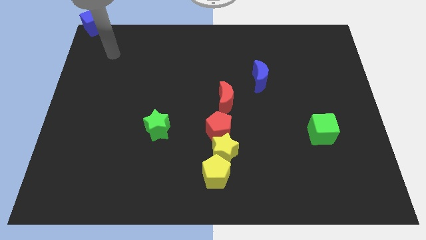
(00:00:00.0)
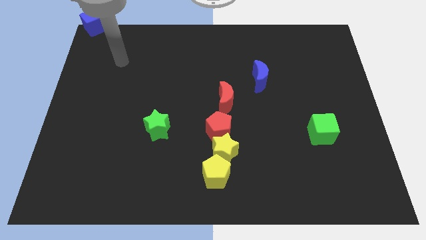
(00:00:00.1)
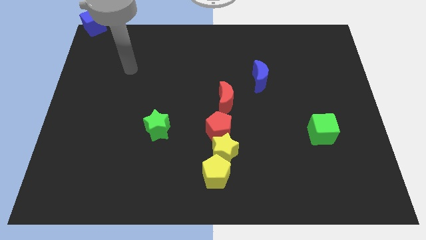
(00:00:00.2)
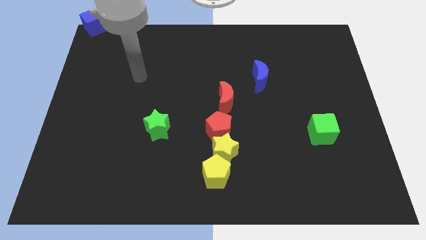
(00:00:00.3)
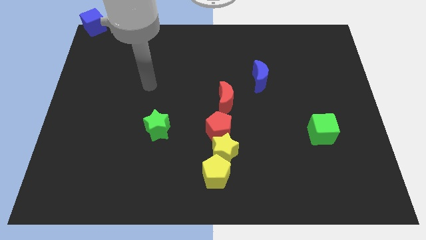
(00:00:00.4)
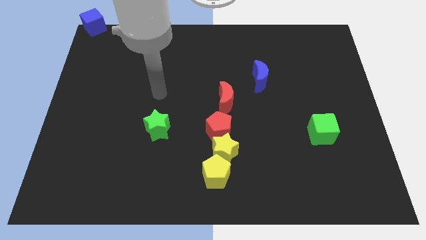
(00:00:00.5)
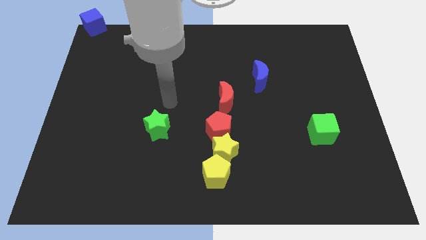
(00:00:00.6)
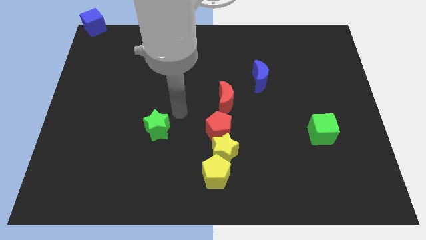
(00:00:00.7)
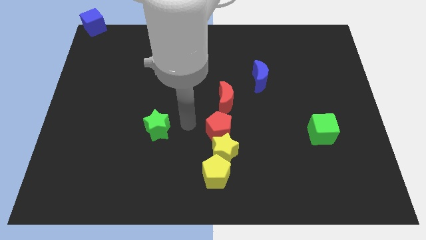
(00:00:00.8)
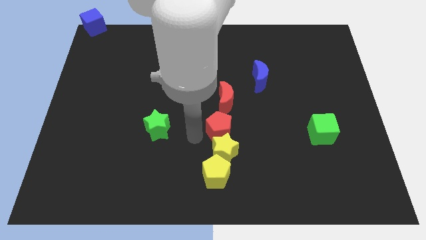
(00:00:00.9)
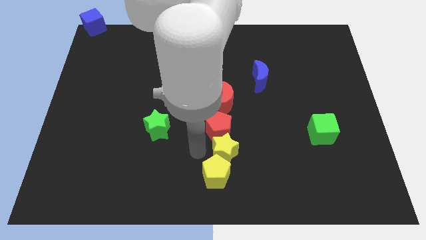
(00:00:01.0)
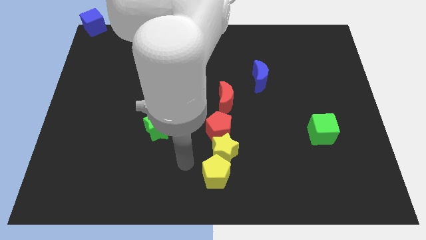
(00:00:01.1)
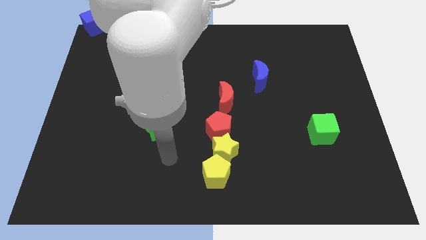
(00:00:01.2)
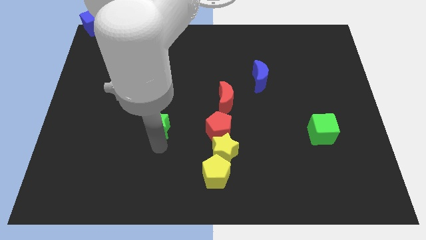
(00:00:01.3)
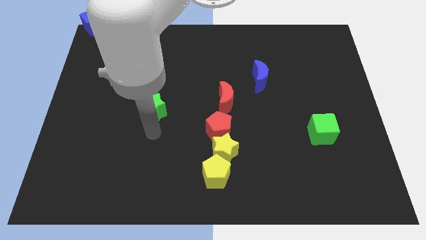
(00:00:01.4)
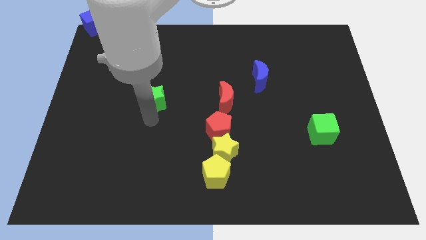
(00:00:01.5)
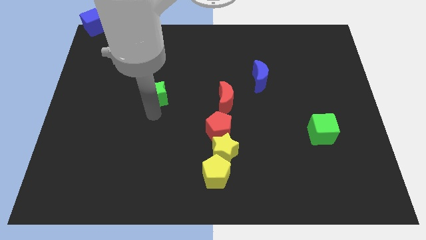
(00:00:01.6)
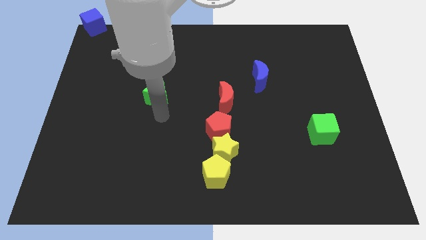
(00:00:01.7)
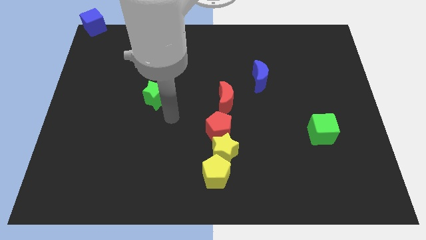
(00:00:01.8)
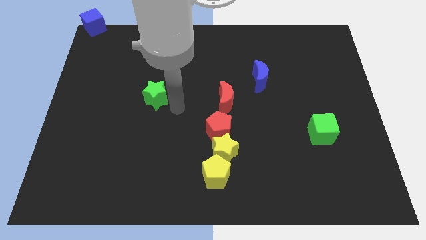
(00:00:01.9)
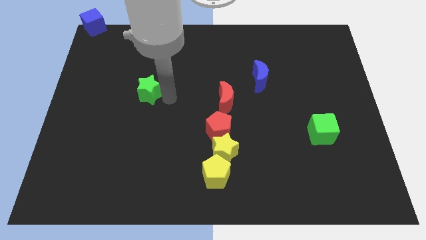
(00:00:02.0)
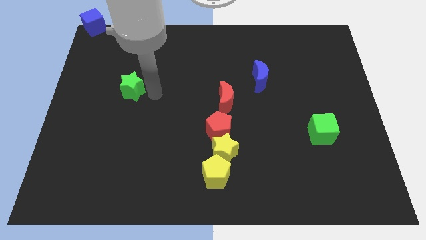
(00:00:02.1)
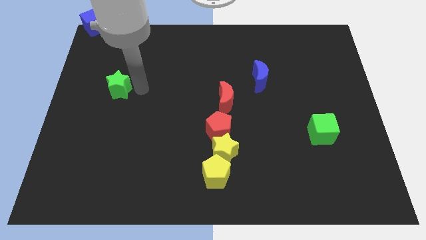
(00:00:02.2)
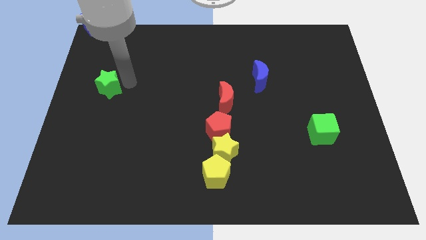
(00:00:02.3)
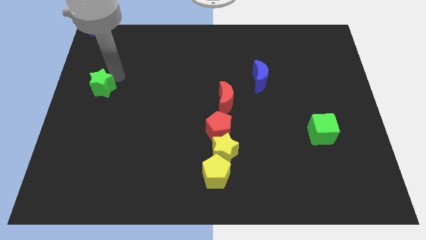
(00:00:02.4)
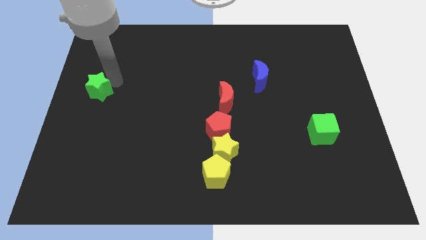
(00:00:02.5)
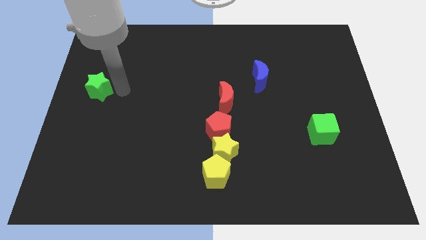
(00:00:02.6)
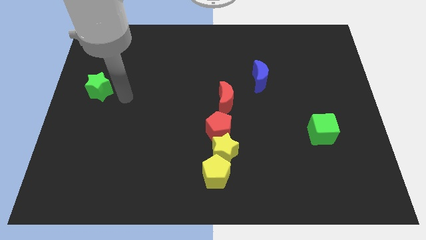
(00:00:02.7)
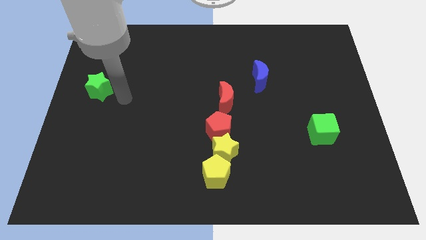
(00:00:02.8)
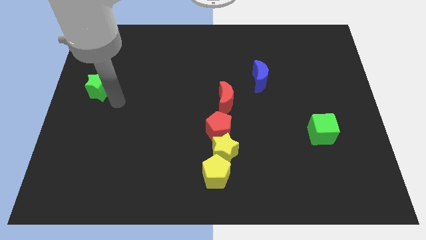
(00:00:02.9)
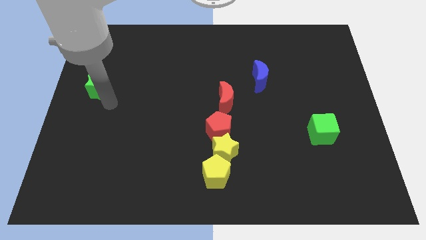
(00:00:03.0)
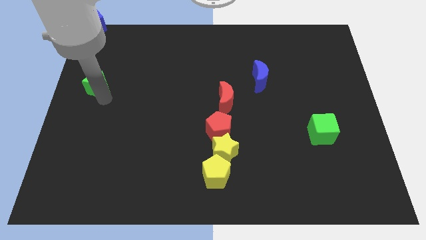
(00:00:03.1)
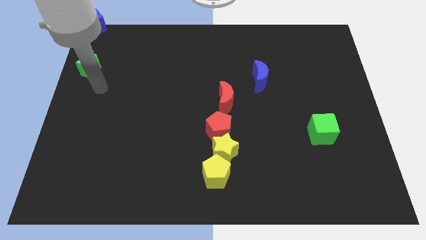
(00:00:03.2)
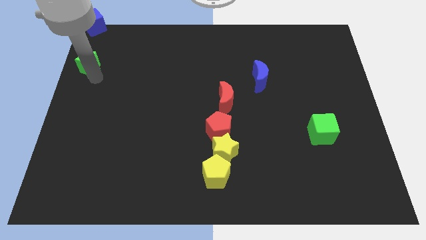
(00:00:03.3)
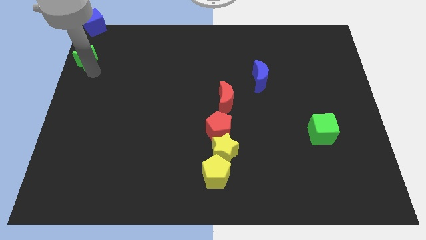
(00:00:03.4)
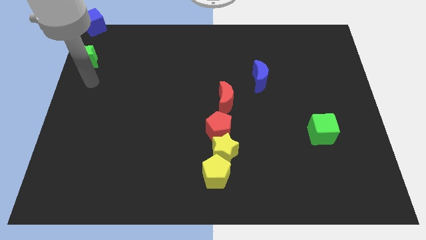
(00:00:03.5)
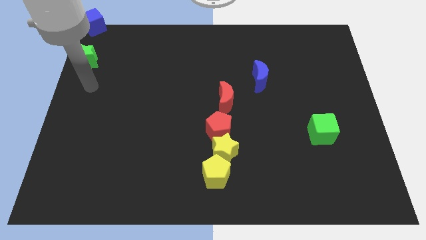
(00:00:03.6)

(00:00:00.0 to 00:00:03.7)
place the green star under the blue cube

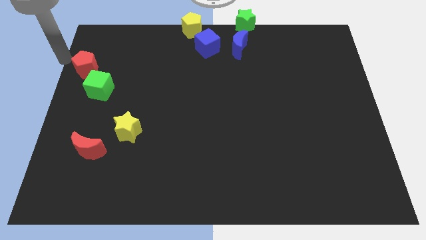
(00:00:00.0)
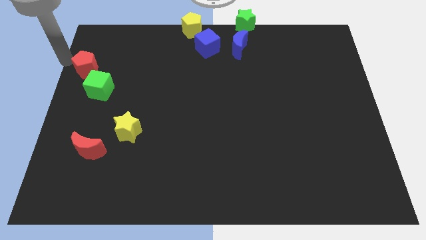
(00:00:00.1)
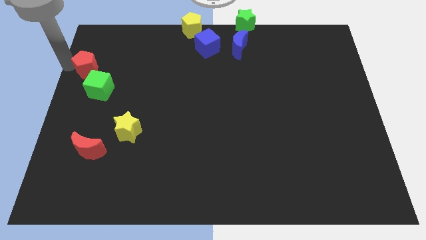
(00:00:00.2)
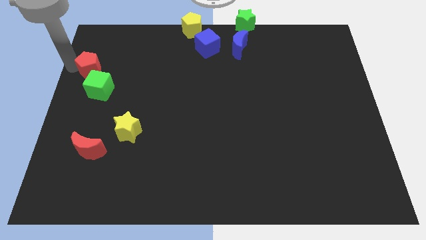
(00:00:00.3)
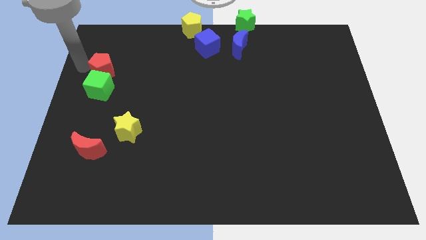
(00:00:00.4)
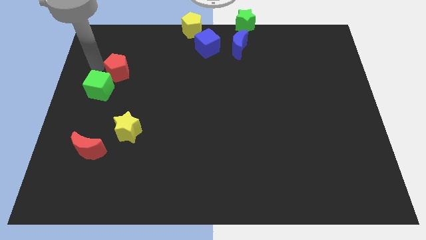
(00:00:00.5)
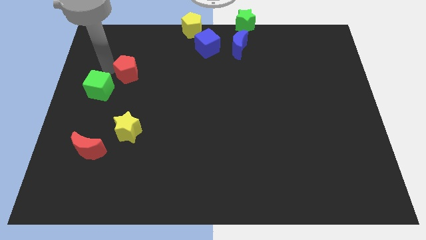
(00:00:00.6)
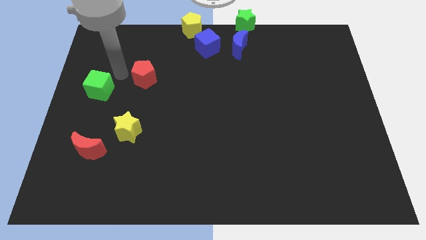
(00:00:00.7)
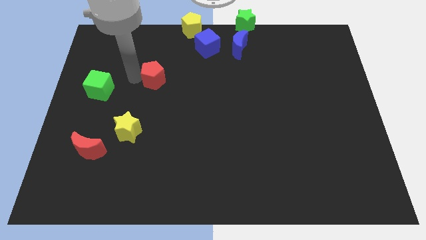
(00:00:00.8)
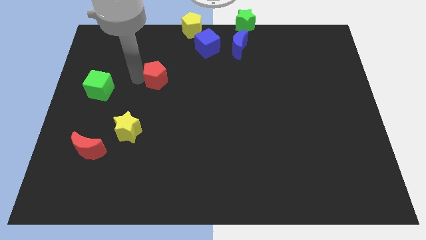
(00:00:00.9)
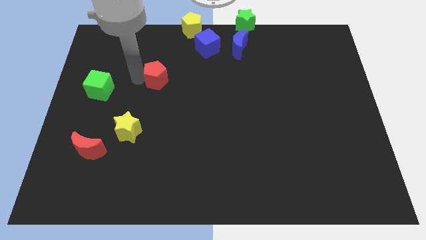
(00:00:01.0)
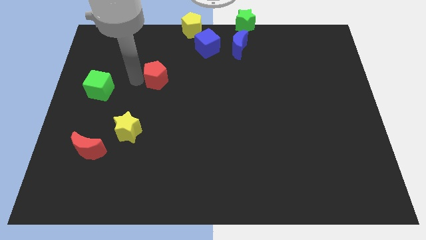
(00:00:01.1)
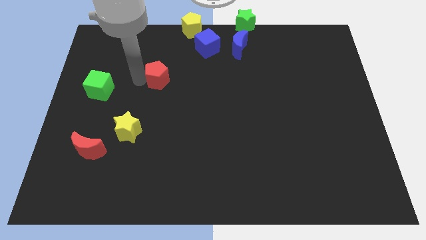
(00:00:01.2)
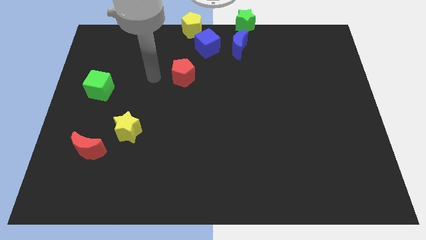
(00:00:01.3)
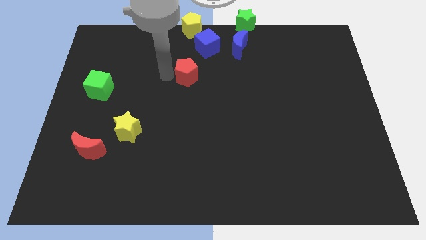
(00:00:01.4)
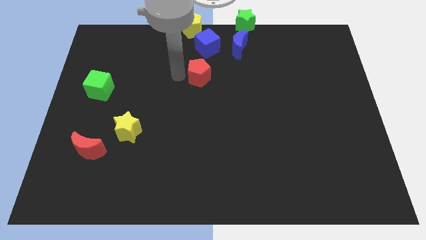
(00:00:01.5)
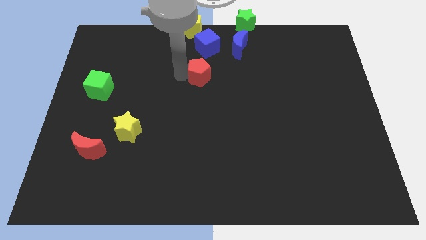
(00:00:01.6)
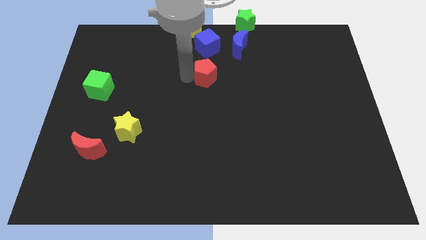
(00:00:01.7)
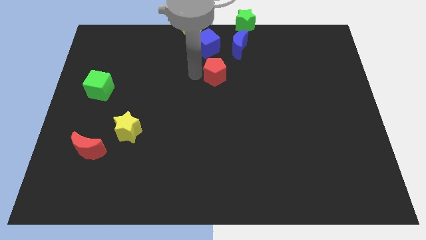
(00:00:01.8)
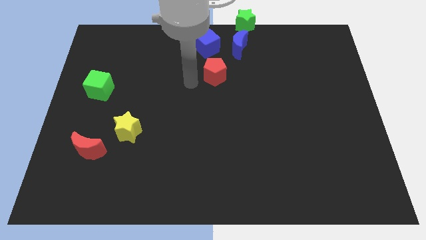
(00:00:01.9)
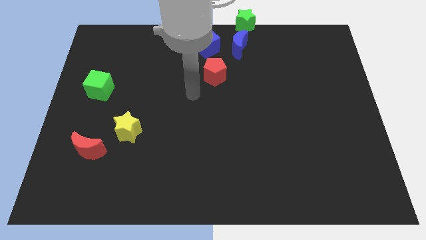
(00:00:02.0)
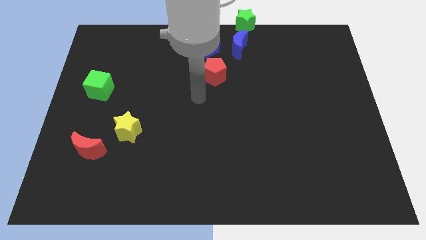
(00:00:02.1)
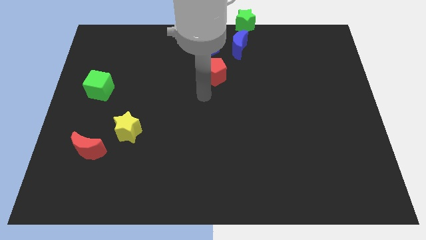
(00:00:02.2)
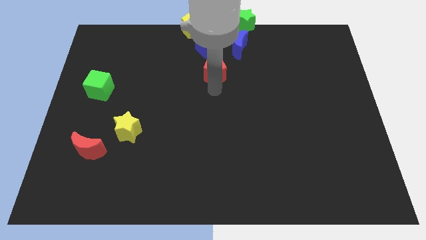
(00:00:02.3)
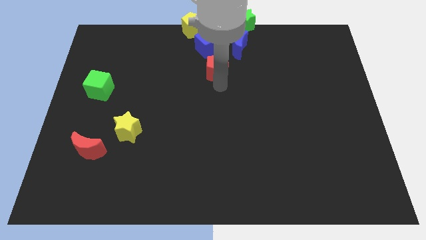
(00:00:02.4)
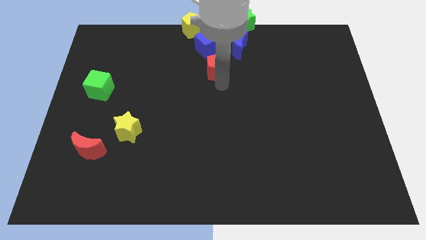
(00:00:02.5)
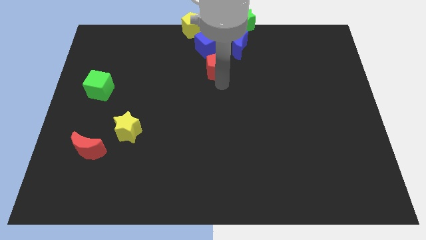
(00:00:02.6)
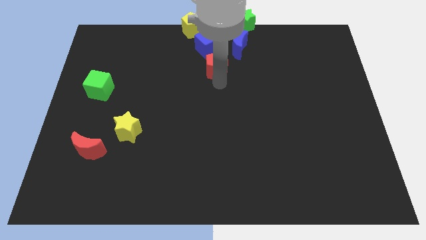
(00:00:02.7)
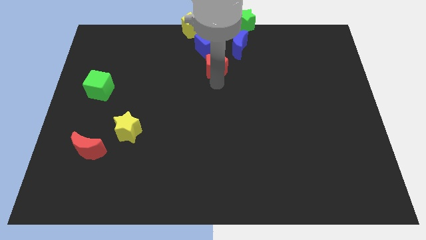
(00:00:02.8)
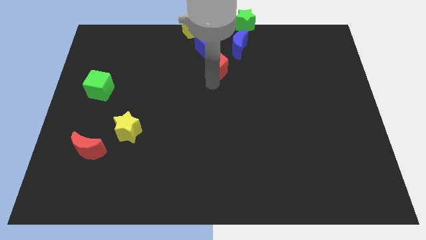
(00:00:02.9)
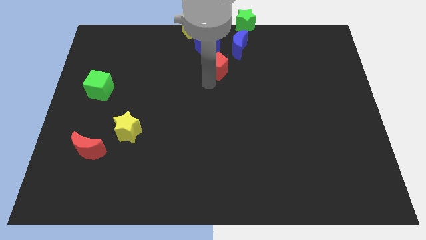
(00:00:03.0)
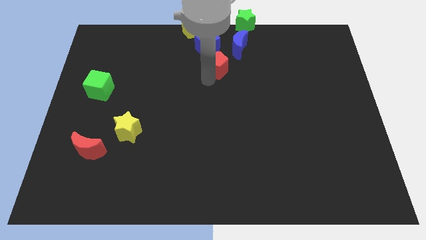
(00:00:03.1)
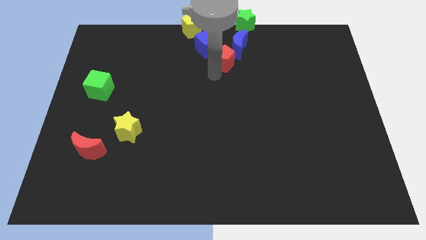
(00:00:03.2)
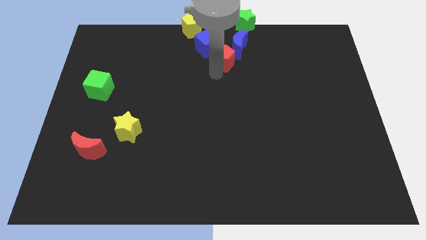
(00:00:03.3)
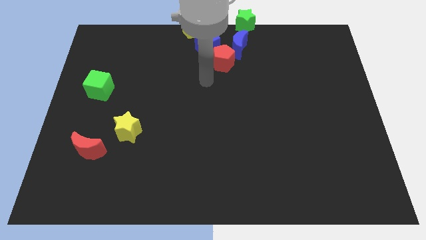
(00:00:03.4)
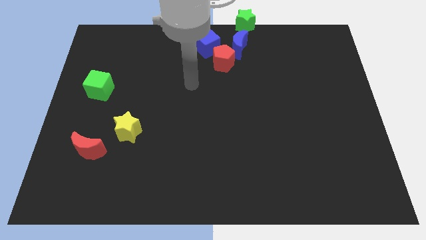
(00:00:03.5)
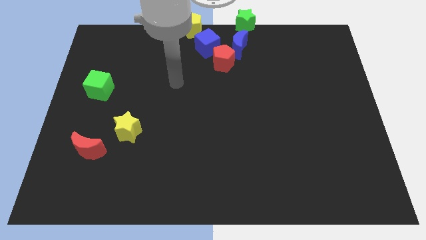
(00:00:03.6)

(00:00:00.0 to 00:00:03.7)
push the red pentagon to the bottom right of the blue cube

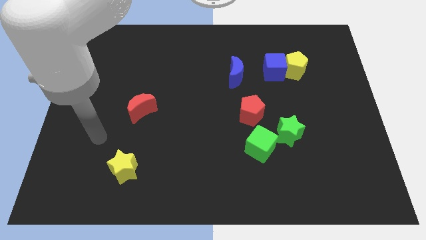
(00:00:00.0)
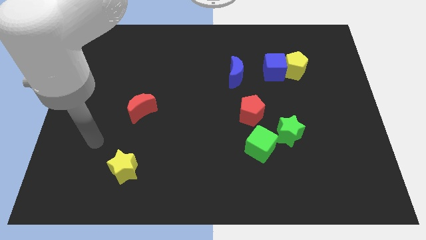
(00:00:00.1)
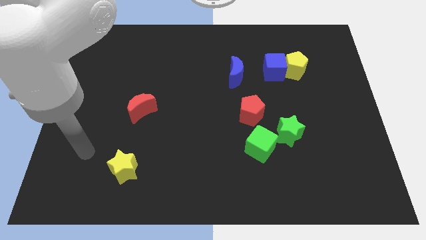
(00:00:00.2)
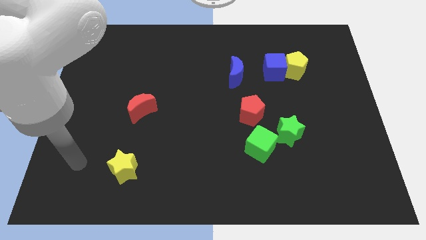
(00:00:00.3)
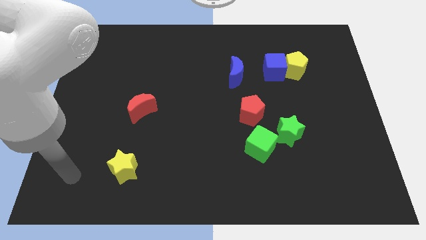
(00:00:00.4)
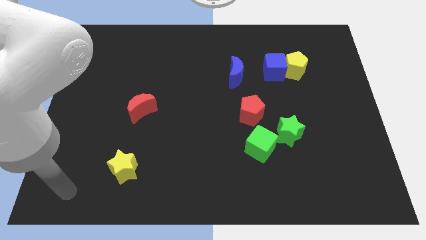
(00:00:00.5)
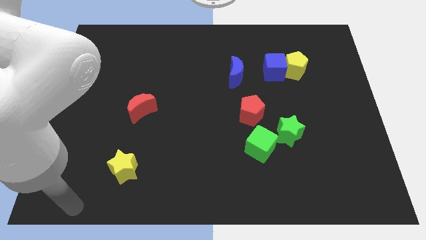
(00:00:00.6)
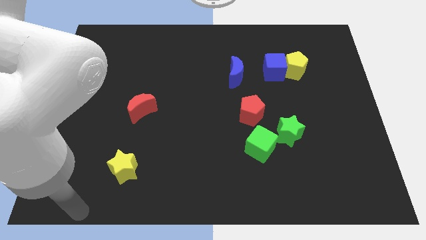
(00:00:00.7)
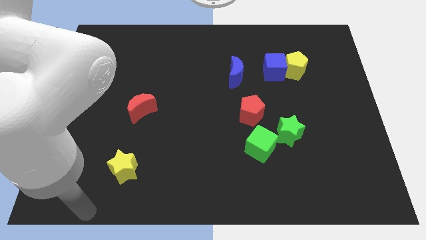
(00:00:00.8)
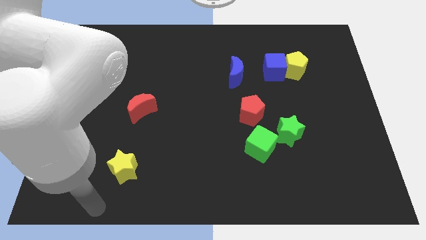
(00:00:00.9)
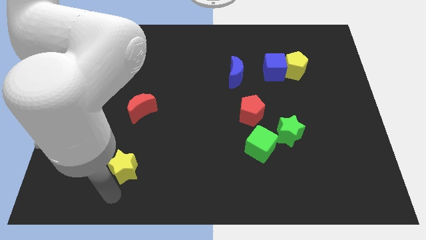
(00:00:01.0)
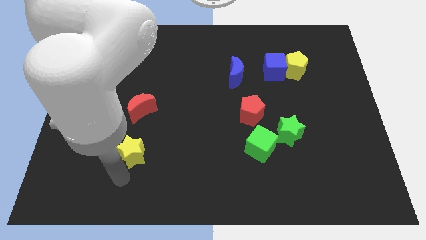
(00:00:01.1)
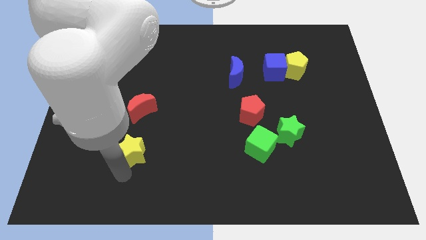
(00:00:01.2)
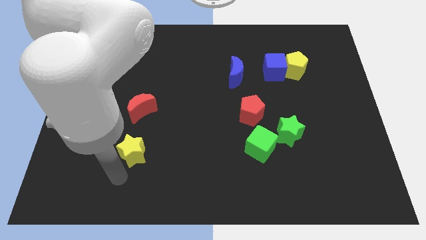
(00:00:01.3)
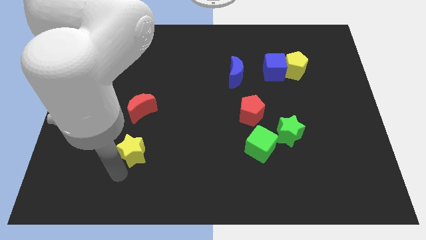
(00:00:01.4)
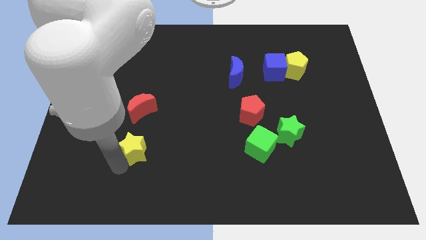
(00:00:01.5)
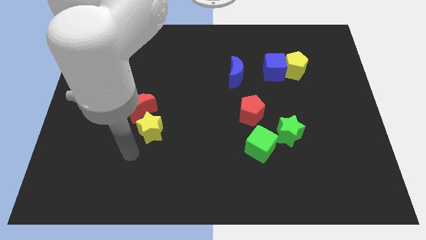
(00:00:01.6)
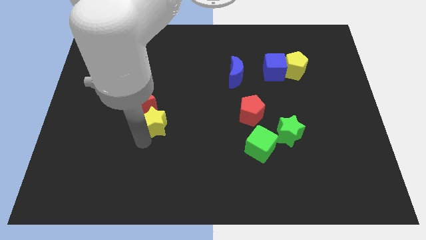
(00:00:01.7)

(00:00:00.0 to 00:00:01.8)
slightly move the yellow star to the top side
